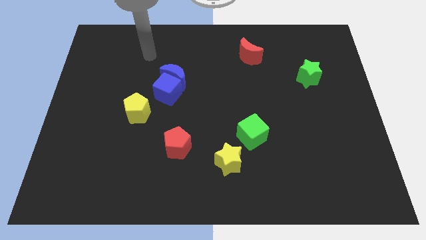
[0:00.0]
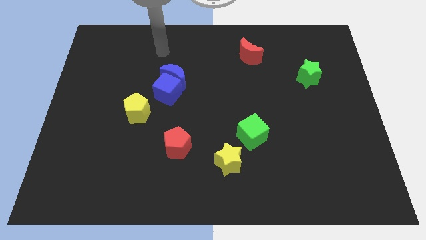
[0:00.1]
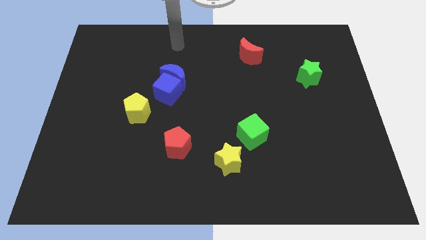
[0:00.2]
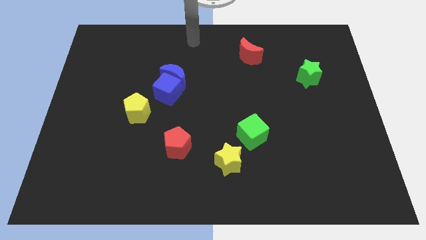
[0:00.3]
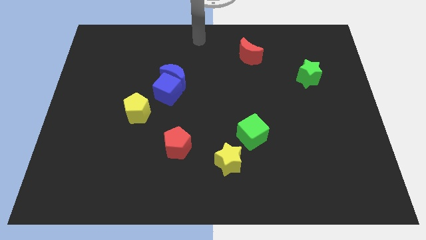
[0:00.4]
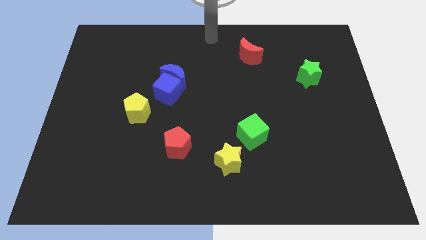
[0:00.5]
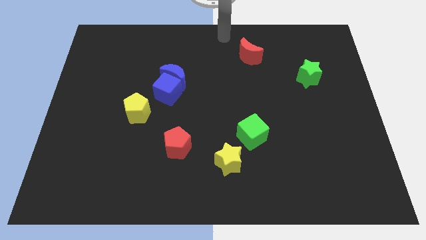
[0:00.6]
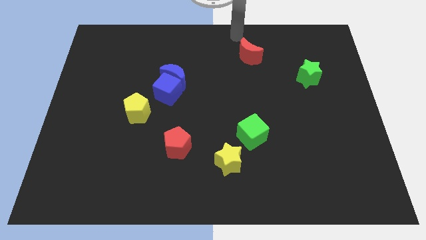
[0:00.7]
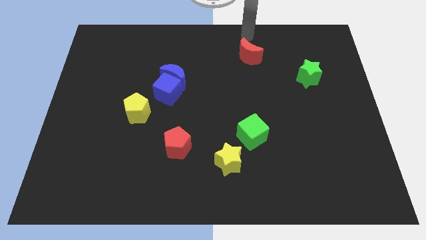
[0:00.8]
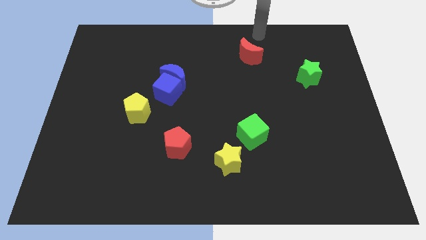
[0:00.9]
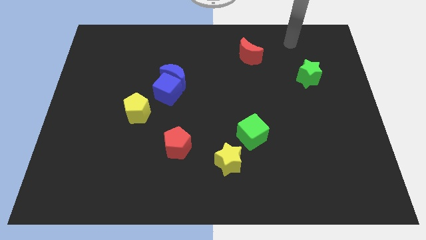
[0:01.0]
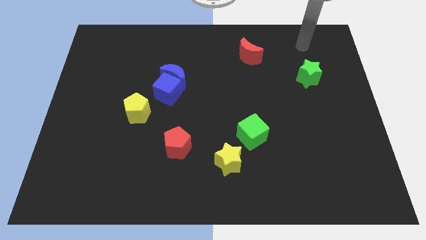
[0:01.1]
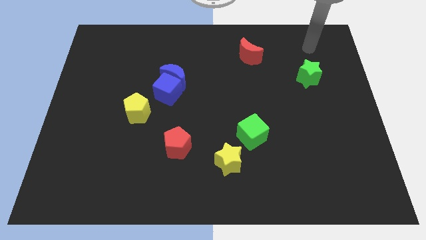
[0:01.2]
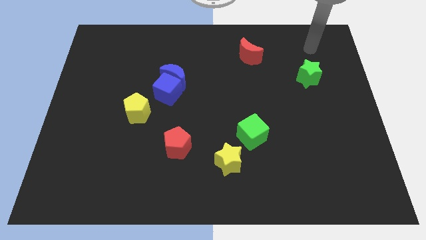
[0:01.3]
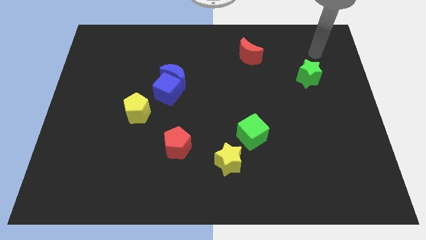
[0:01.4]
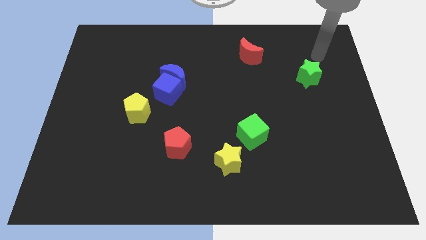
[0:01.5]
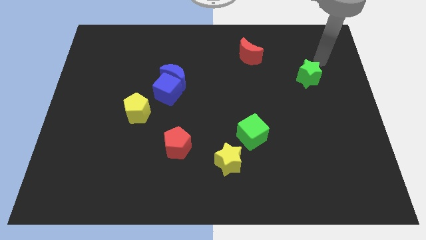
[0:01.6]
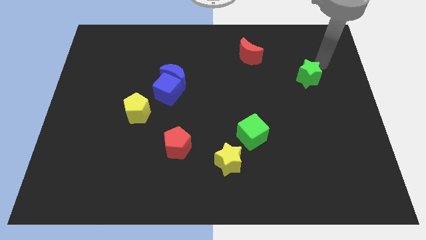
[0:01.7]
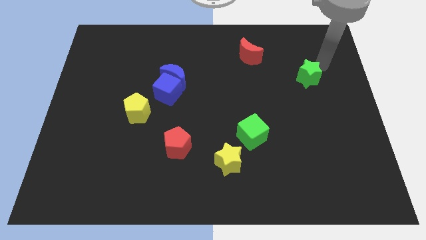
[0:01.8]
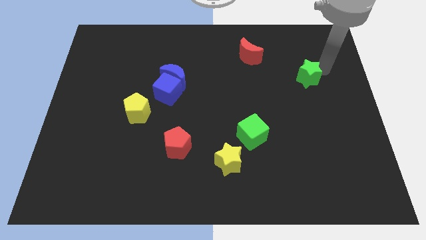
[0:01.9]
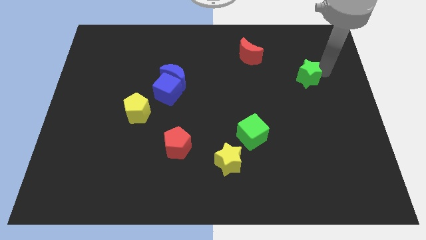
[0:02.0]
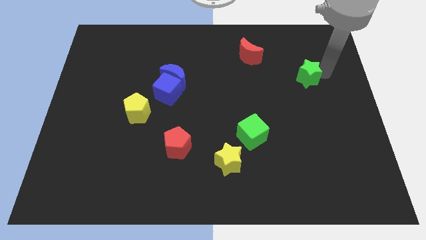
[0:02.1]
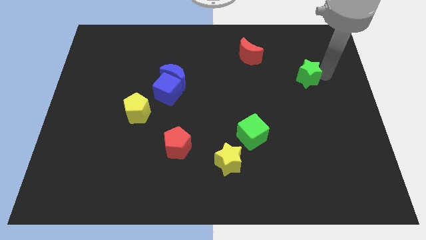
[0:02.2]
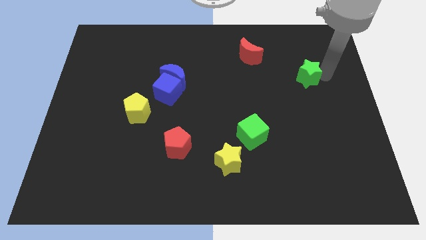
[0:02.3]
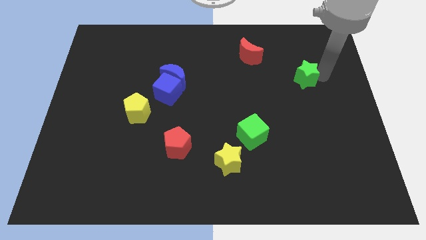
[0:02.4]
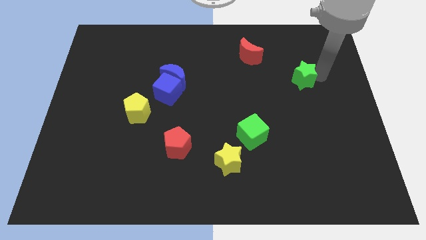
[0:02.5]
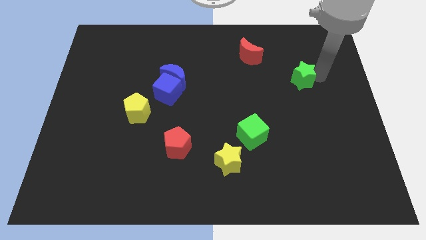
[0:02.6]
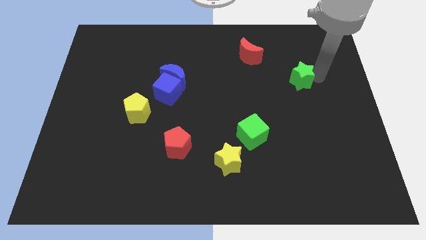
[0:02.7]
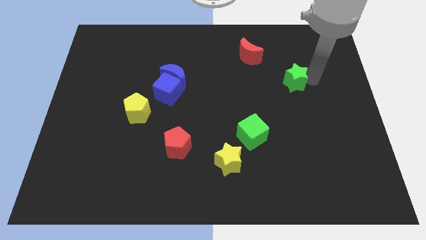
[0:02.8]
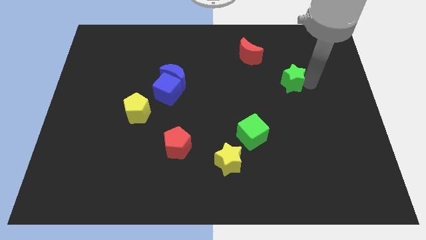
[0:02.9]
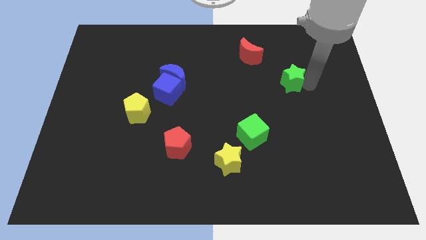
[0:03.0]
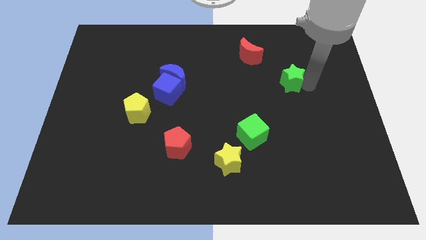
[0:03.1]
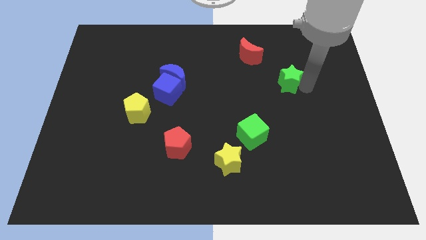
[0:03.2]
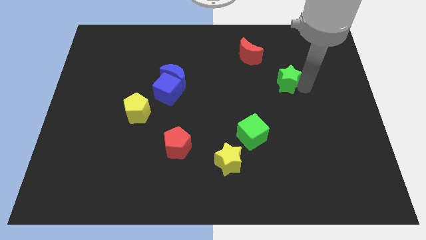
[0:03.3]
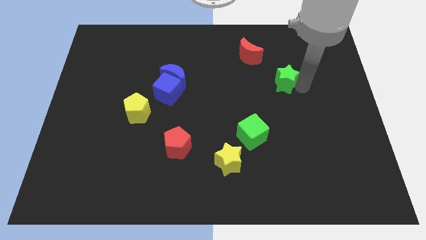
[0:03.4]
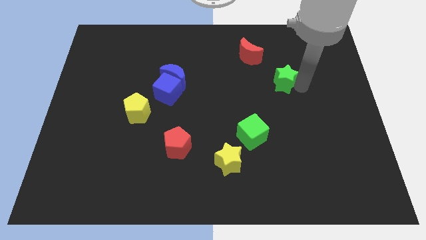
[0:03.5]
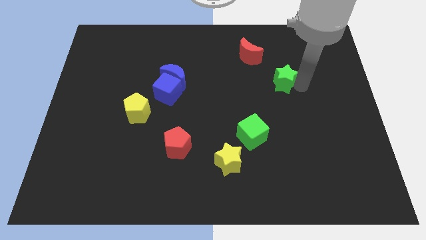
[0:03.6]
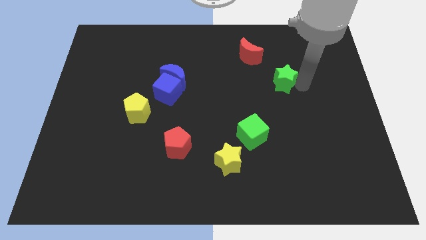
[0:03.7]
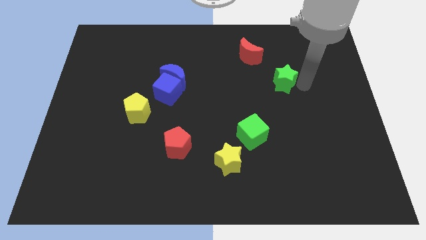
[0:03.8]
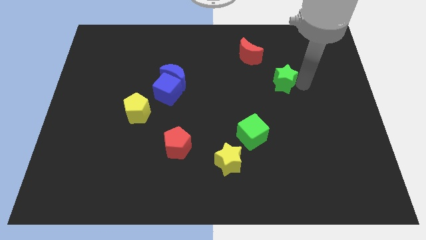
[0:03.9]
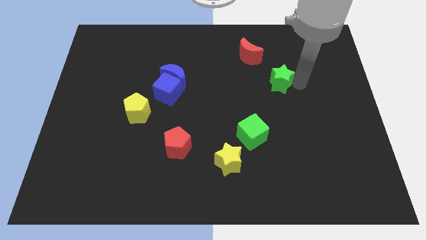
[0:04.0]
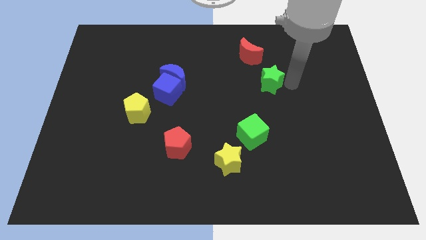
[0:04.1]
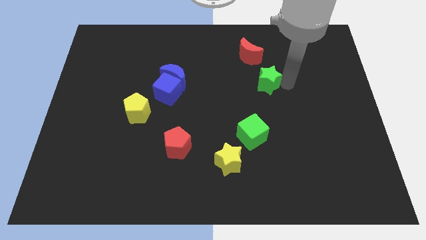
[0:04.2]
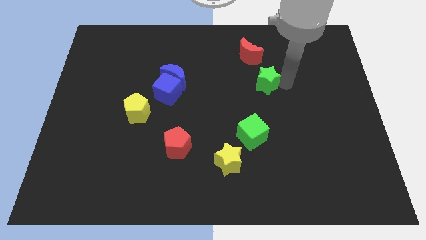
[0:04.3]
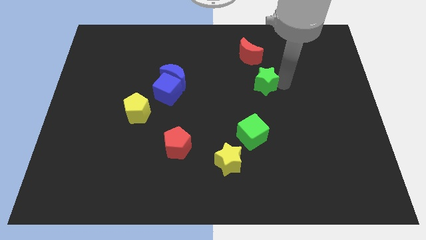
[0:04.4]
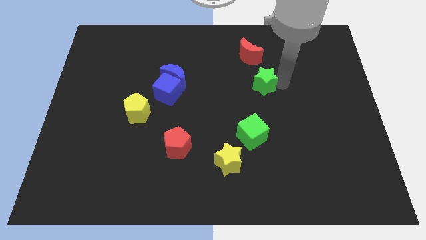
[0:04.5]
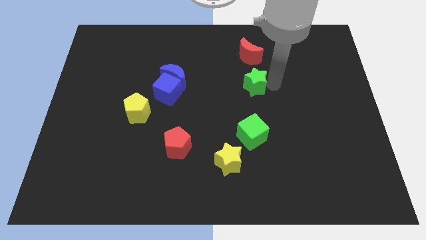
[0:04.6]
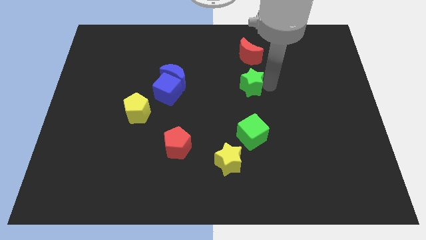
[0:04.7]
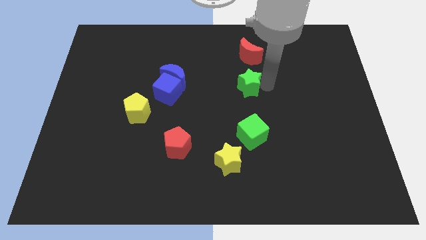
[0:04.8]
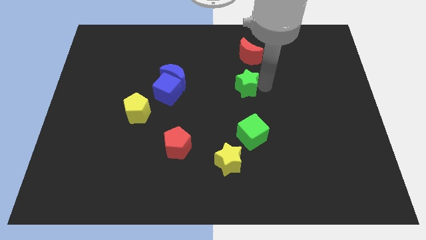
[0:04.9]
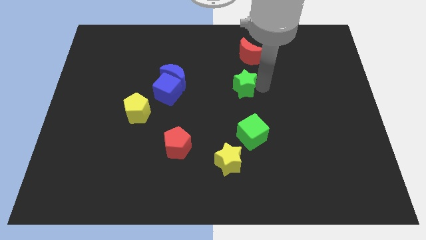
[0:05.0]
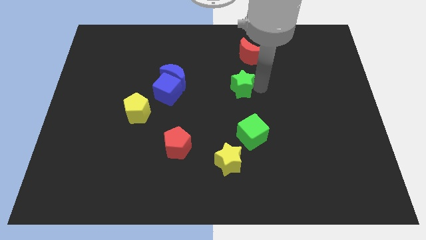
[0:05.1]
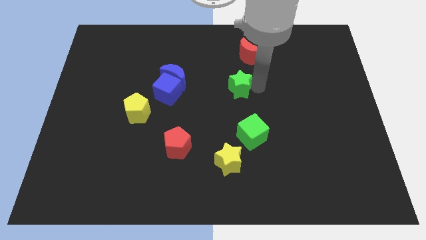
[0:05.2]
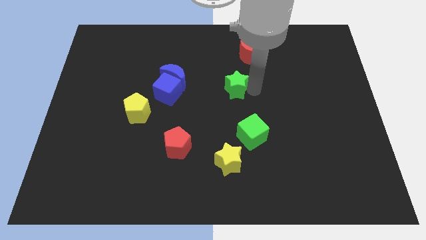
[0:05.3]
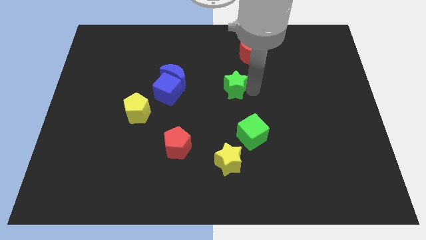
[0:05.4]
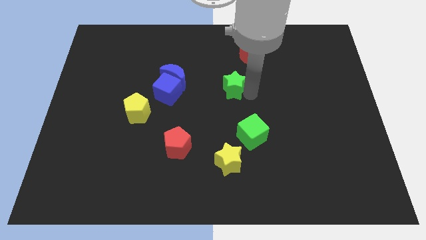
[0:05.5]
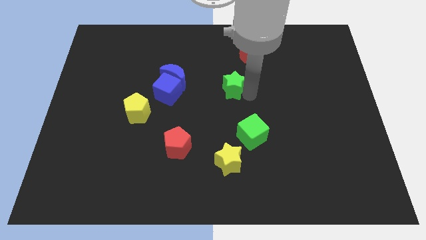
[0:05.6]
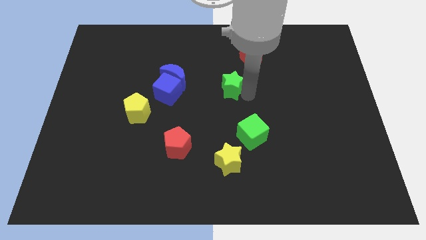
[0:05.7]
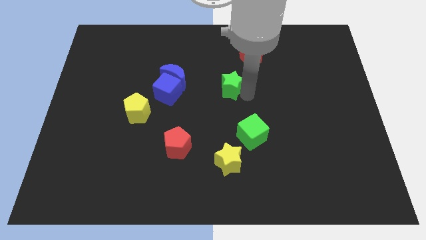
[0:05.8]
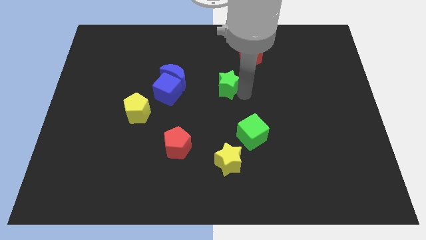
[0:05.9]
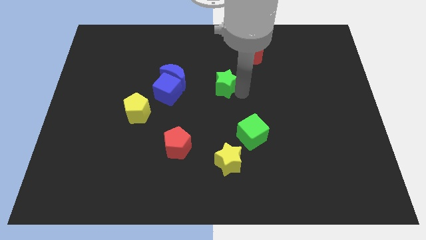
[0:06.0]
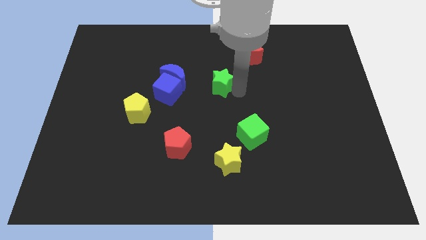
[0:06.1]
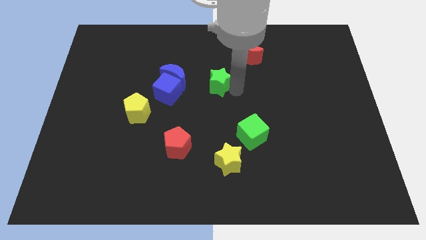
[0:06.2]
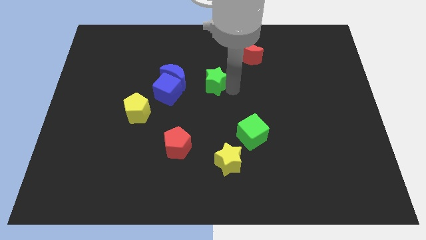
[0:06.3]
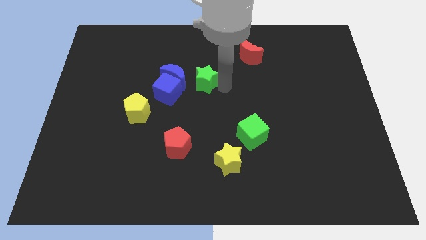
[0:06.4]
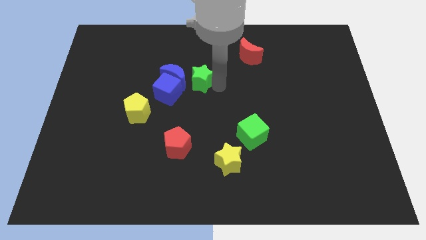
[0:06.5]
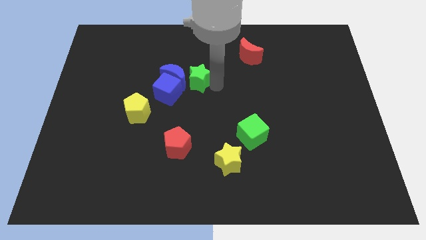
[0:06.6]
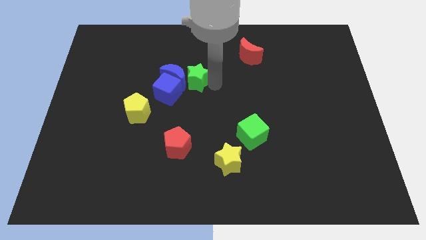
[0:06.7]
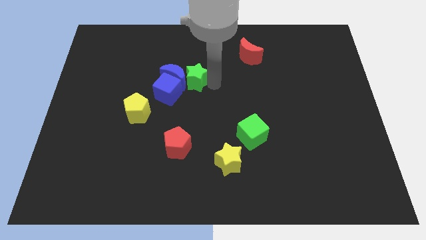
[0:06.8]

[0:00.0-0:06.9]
slide the green star next to the blue moon

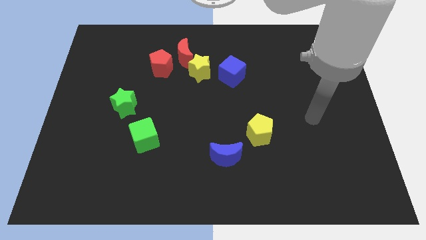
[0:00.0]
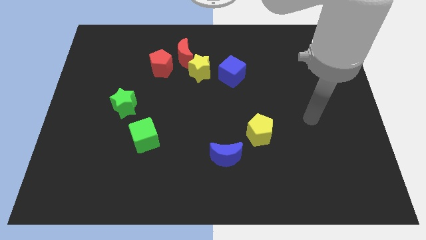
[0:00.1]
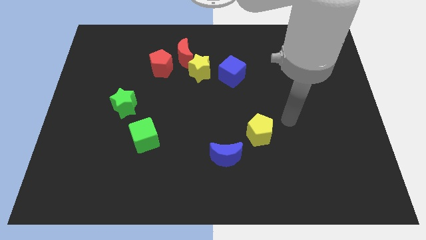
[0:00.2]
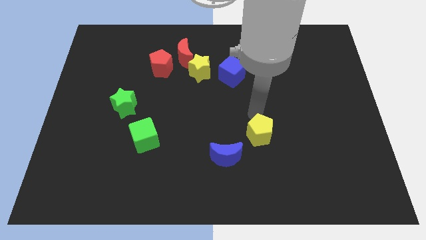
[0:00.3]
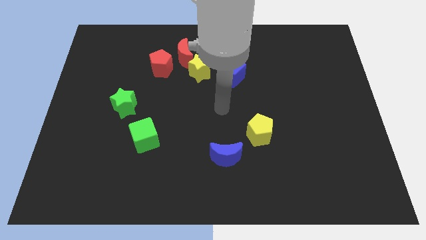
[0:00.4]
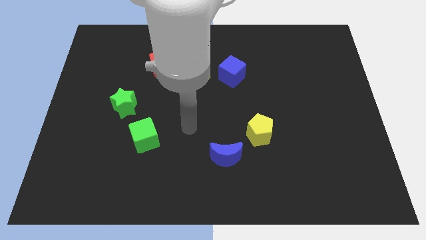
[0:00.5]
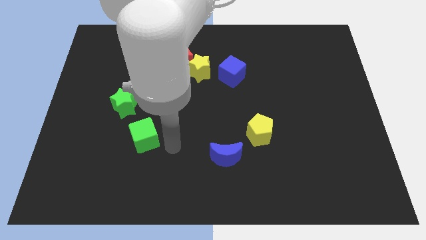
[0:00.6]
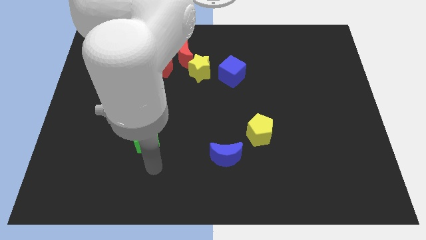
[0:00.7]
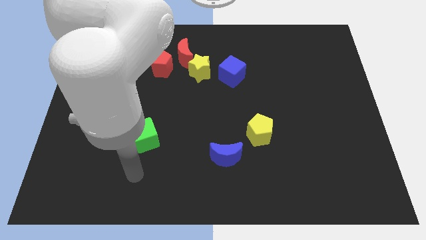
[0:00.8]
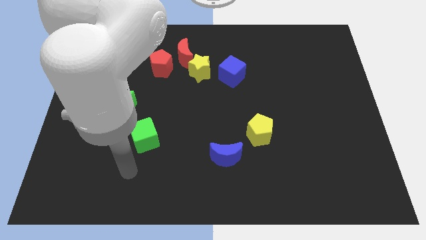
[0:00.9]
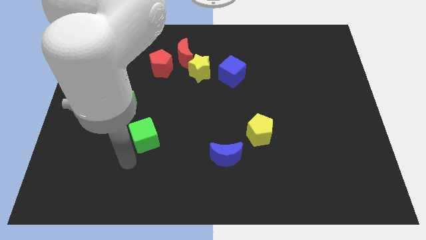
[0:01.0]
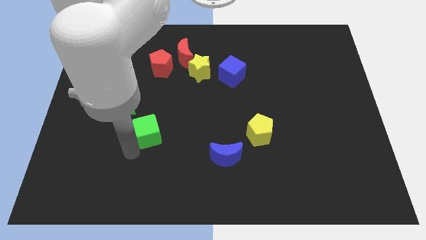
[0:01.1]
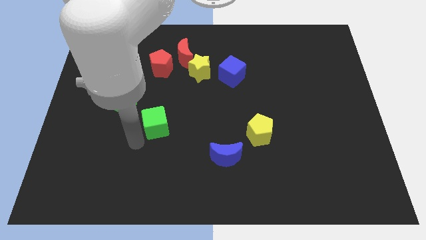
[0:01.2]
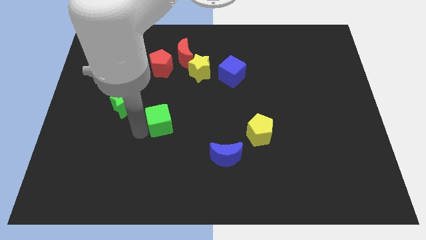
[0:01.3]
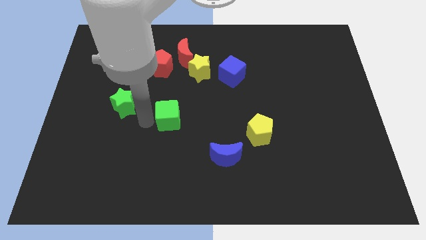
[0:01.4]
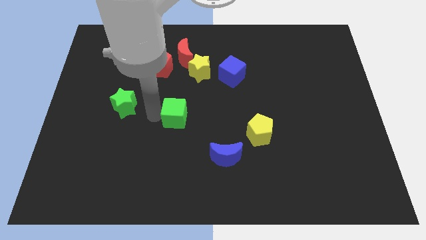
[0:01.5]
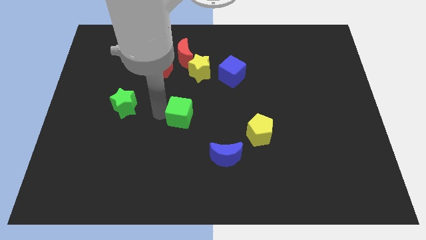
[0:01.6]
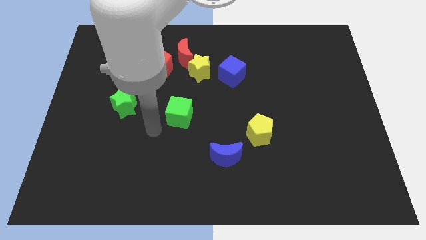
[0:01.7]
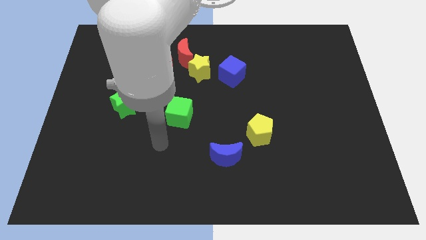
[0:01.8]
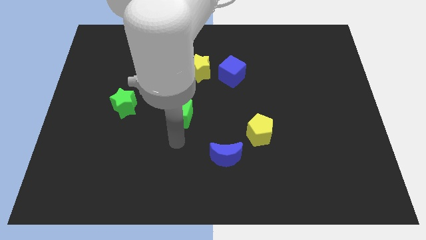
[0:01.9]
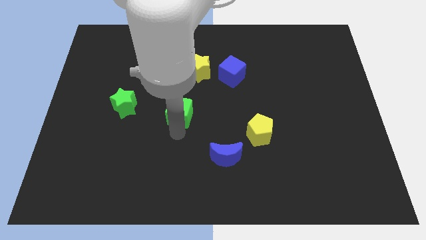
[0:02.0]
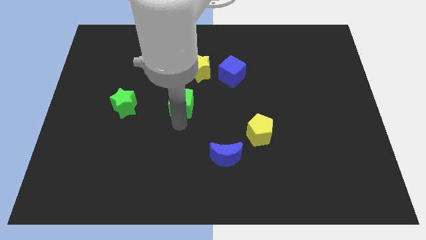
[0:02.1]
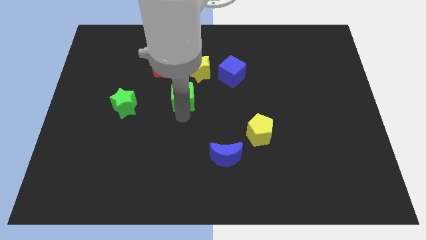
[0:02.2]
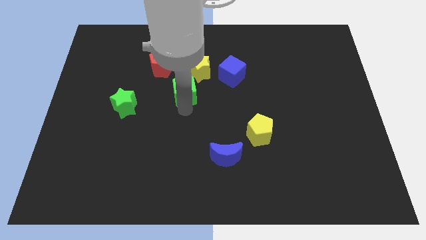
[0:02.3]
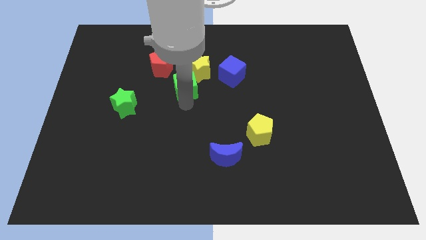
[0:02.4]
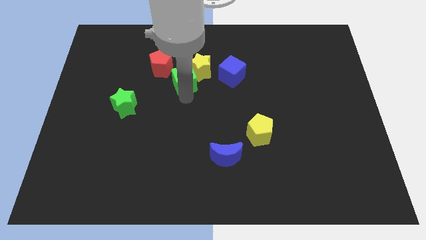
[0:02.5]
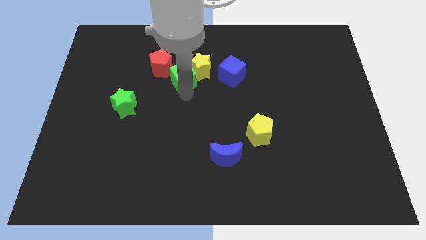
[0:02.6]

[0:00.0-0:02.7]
slide the green cube close to the yellow star
